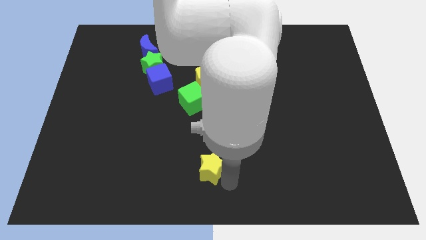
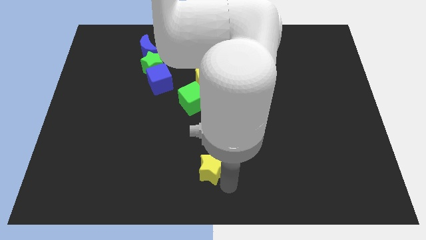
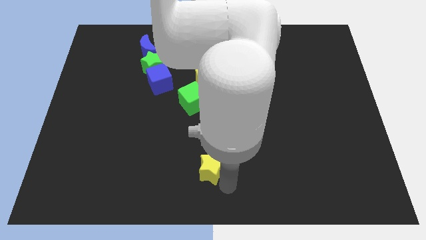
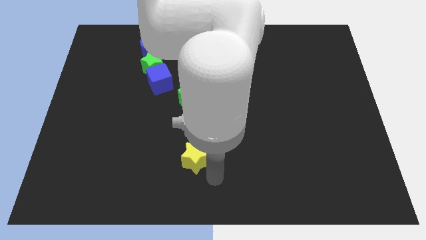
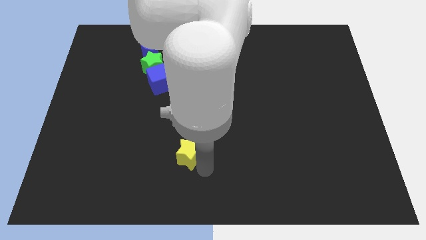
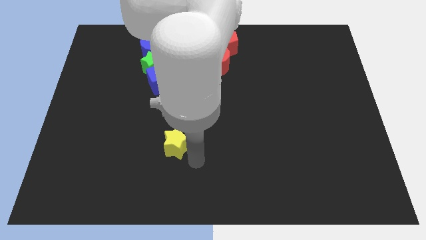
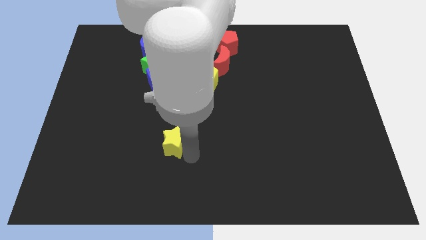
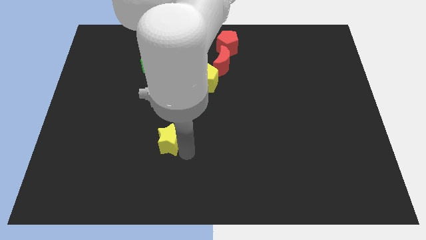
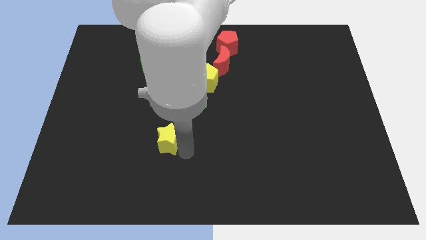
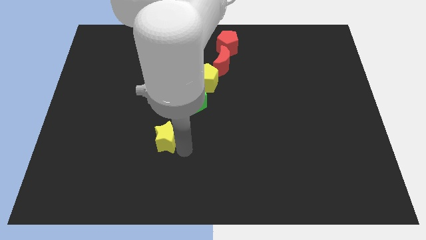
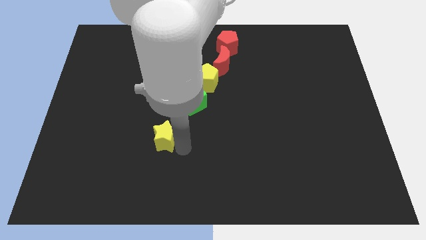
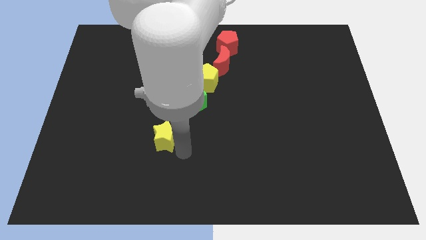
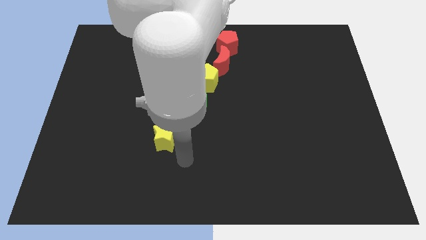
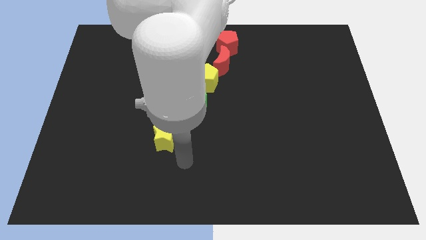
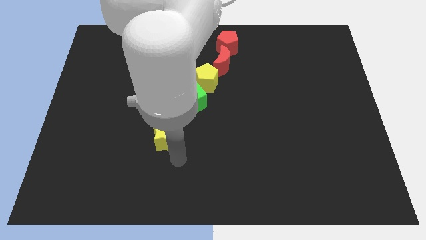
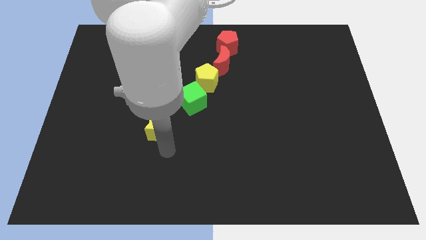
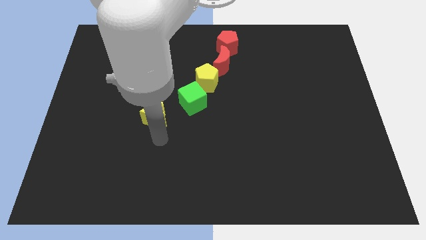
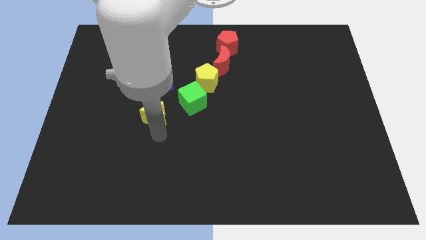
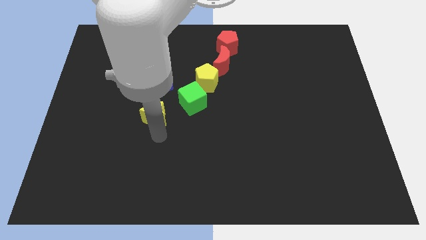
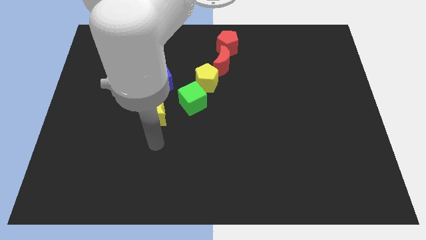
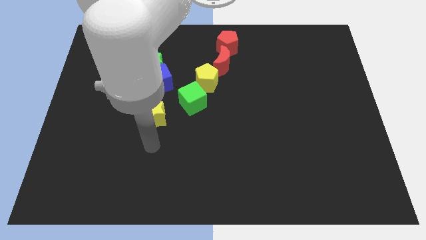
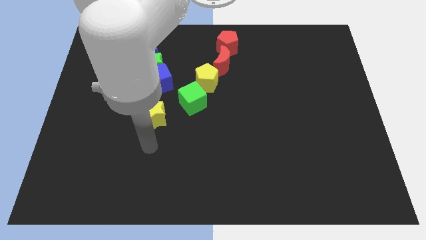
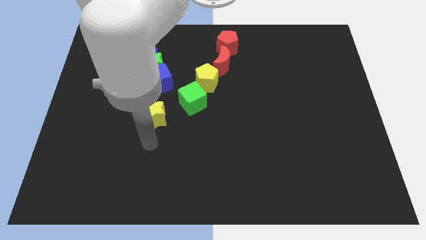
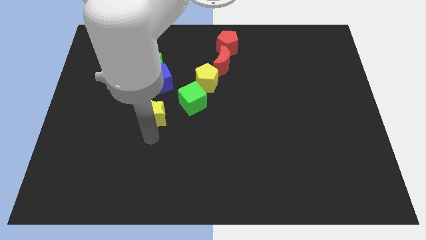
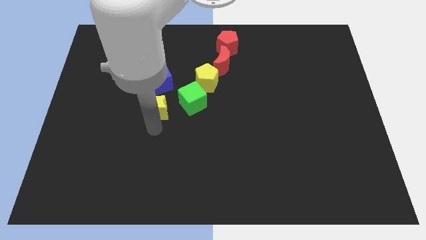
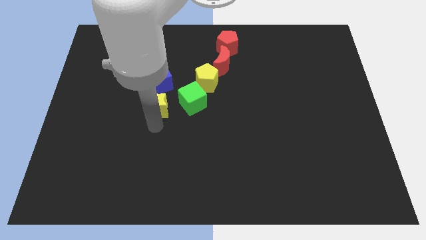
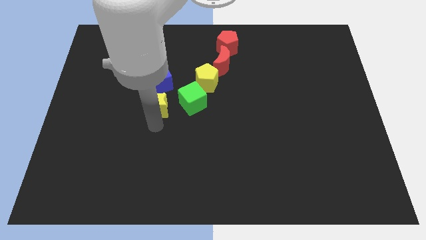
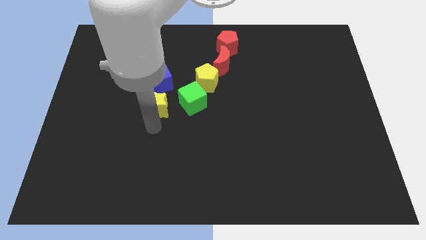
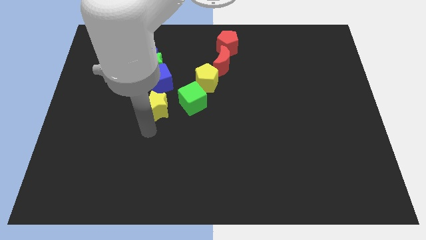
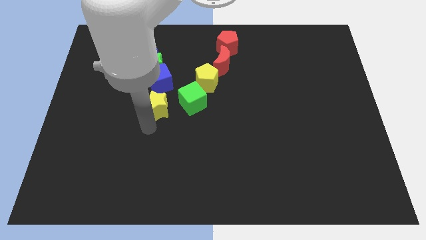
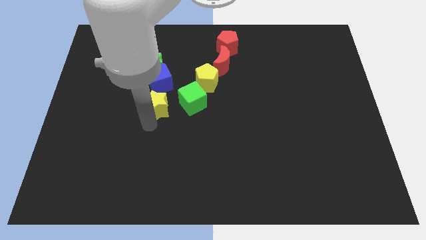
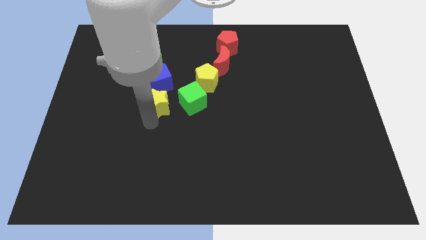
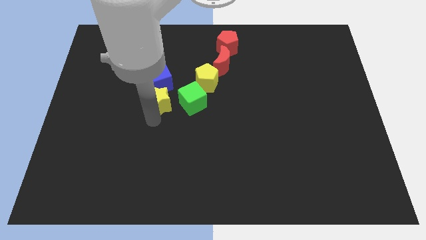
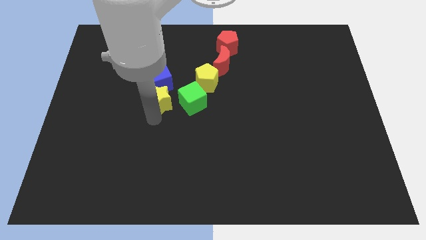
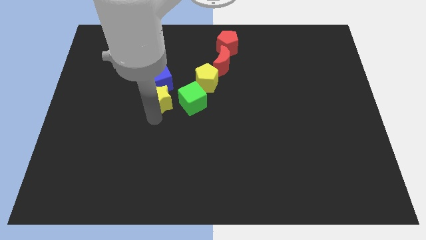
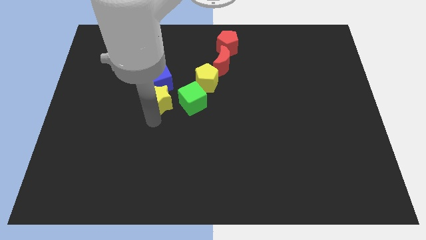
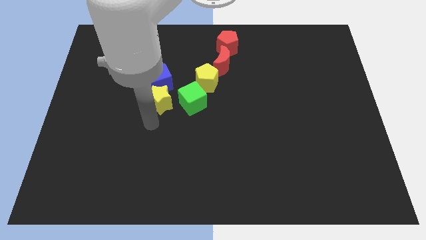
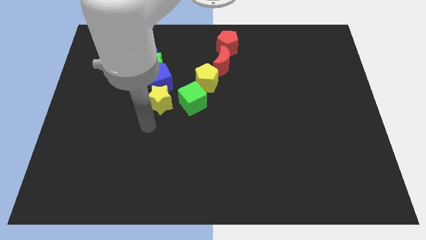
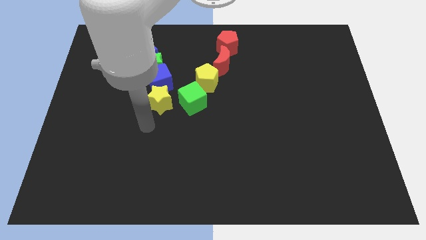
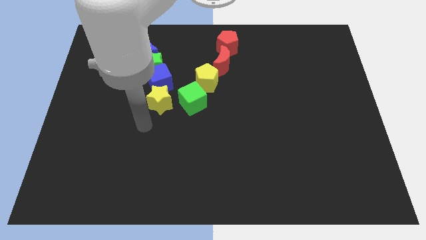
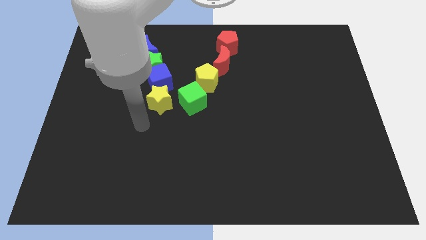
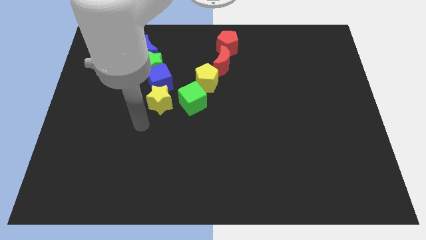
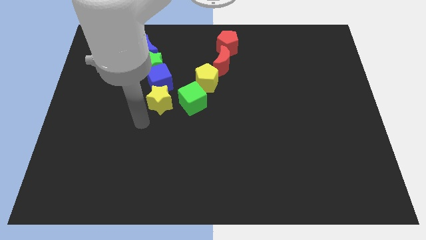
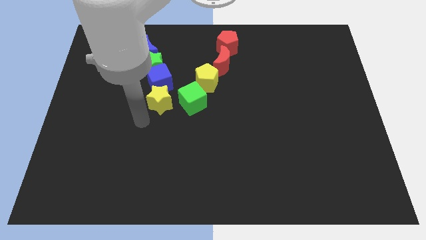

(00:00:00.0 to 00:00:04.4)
place the yellow star to the left side of the green cube

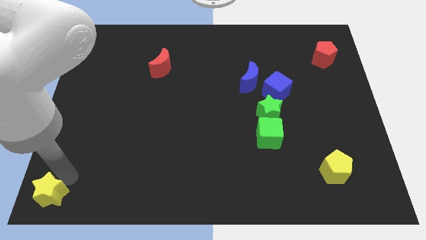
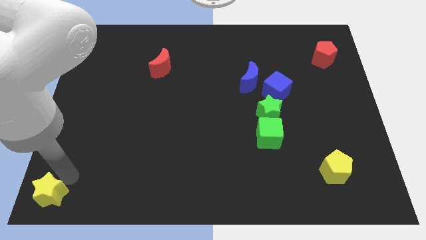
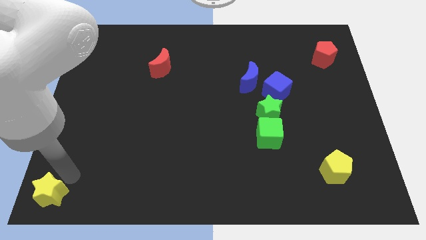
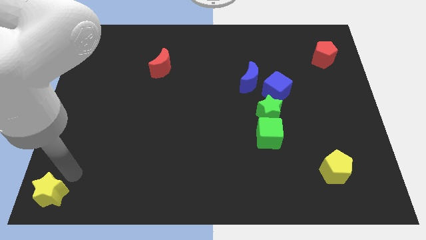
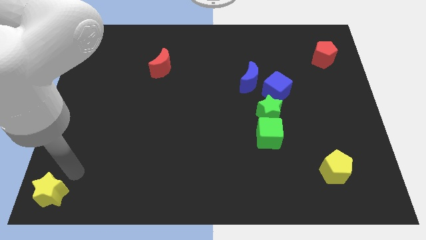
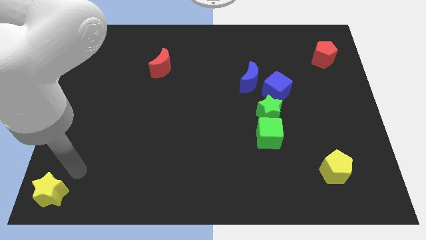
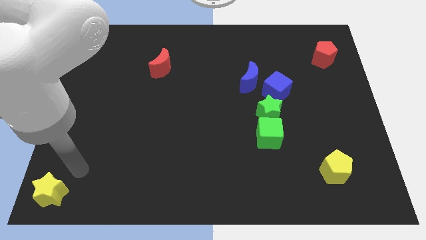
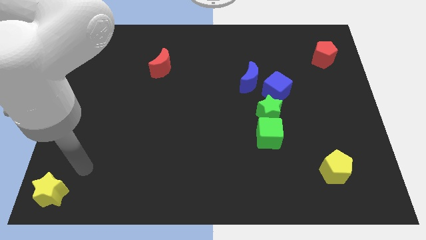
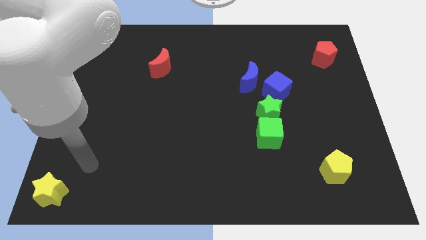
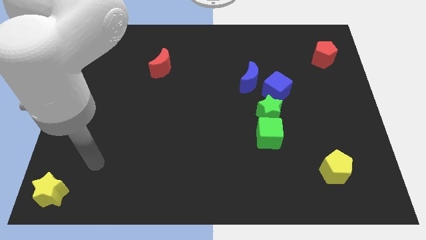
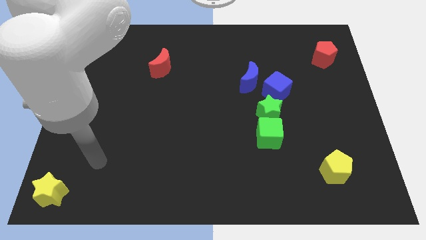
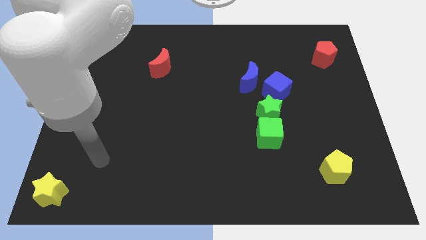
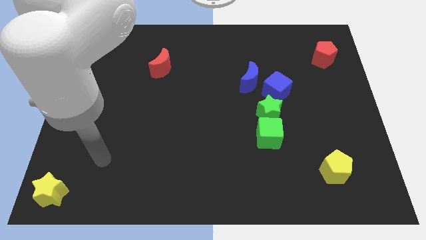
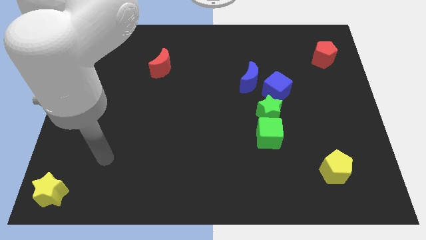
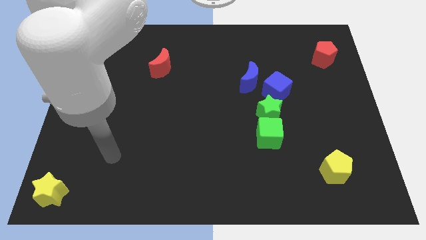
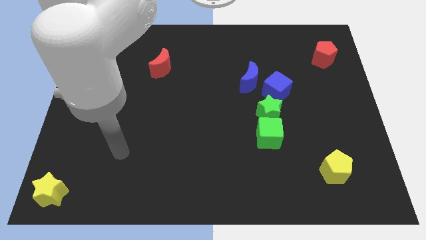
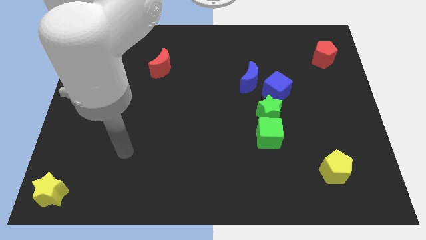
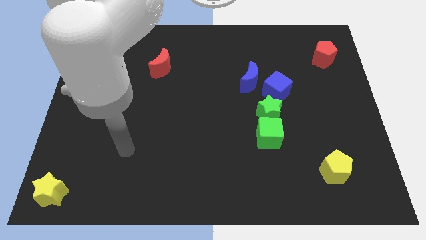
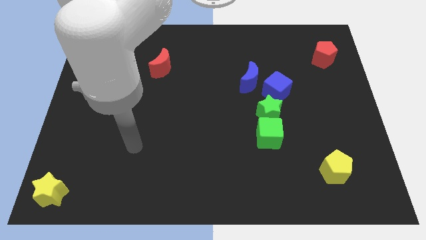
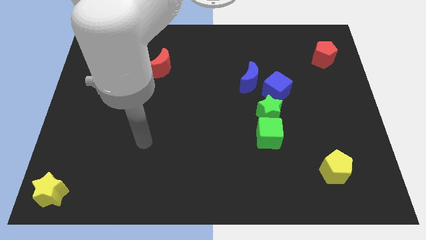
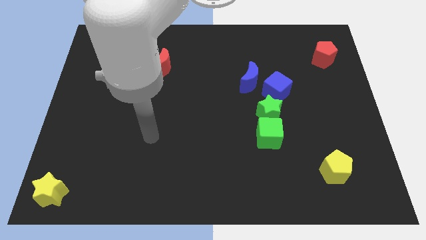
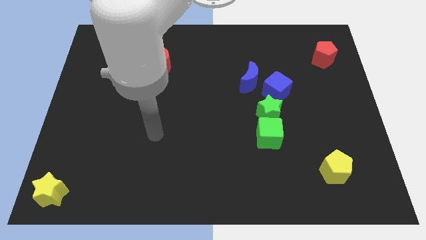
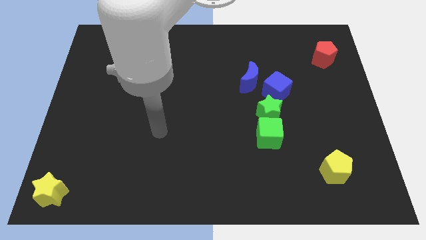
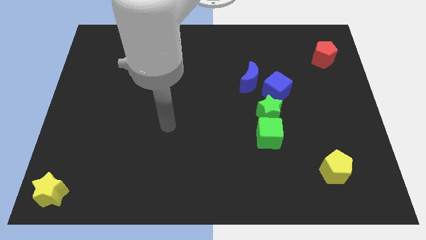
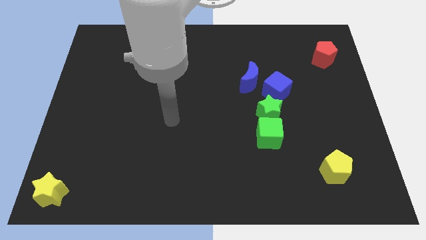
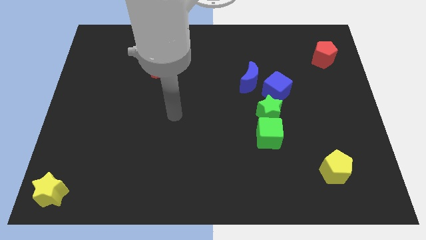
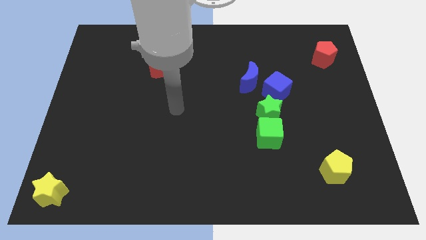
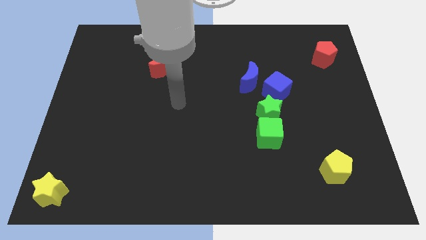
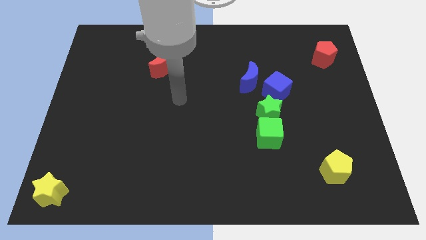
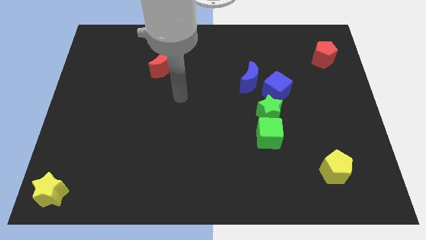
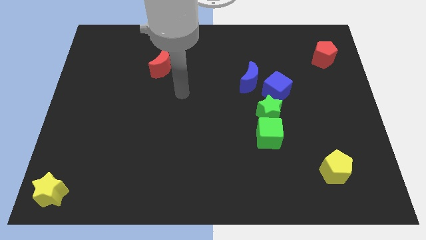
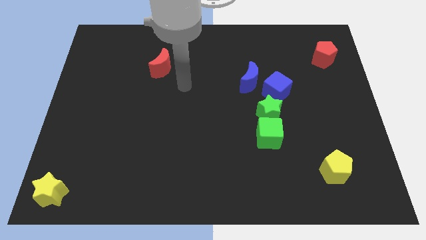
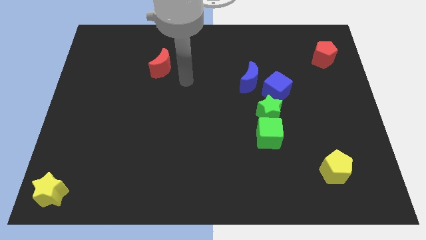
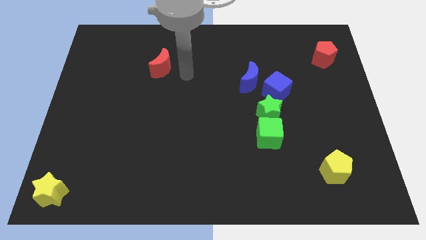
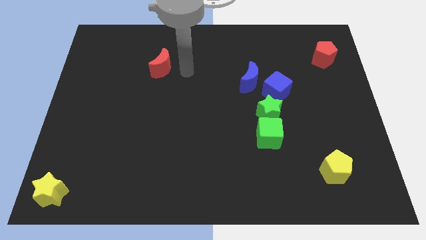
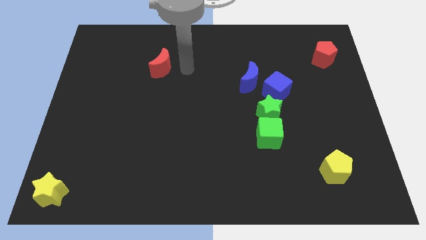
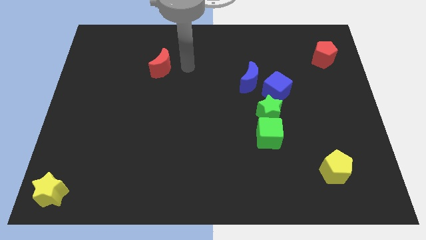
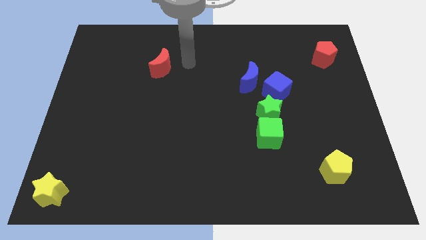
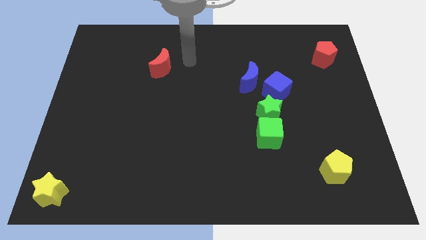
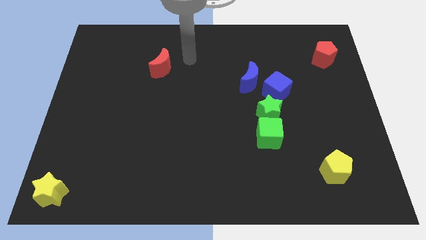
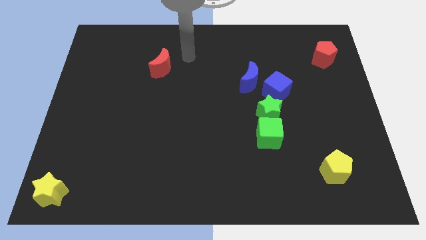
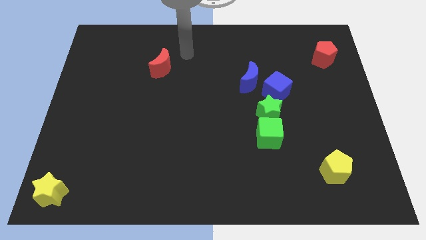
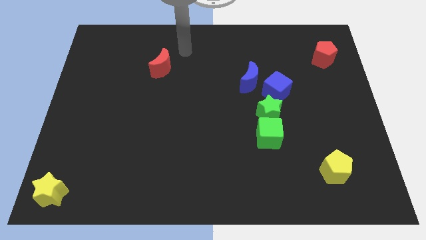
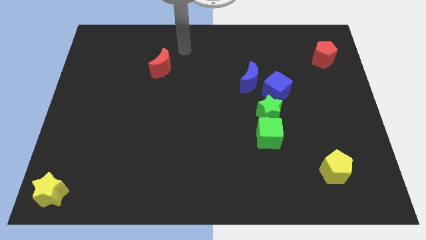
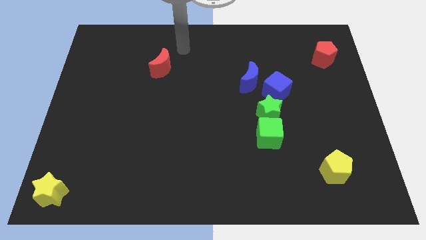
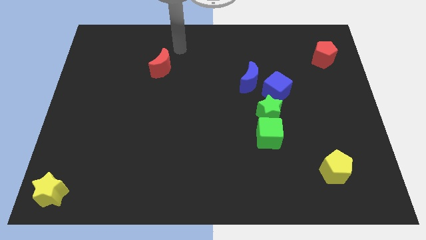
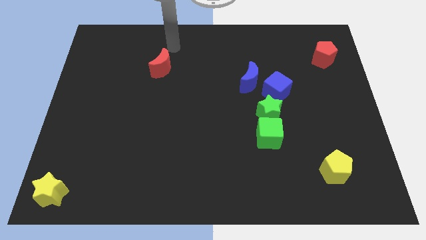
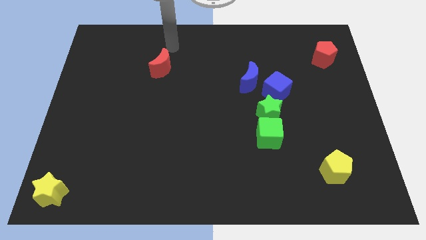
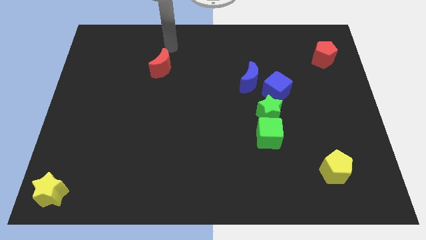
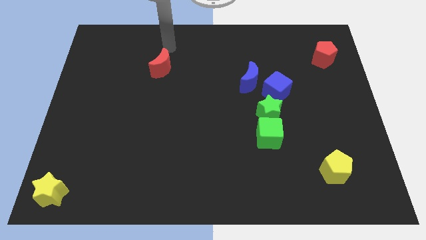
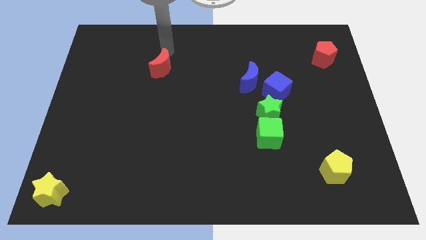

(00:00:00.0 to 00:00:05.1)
place your arm to the top of red moon
